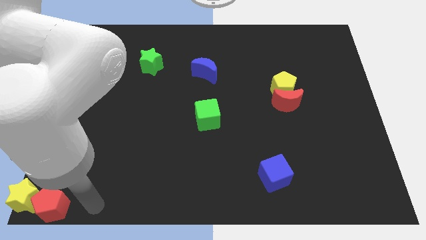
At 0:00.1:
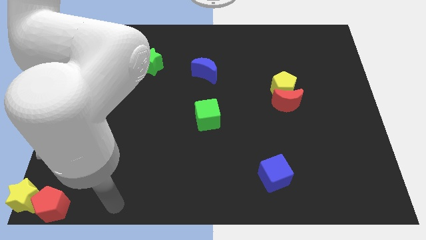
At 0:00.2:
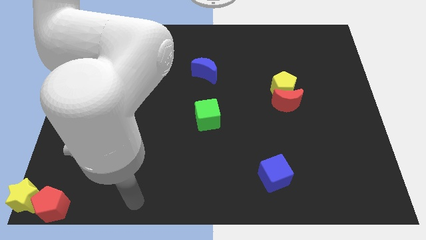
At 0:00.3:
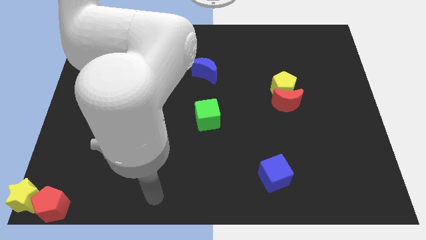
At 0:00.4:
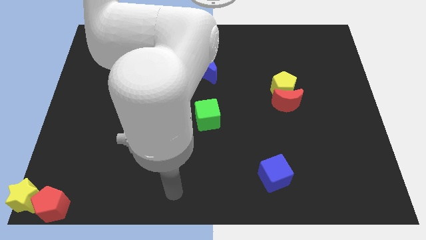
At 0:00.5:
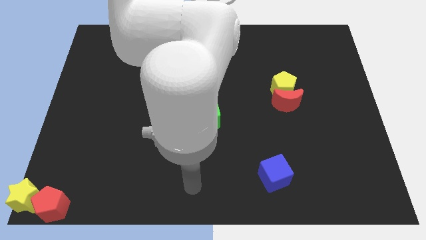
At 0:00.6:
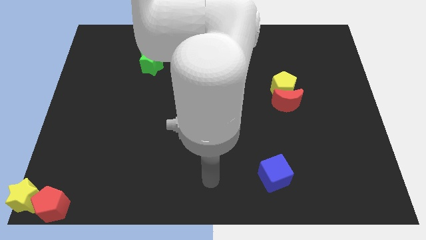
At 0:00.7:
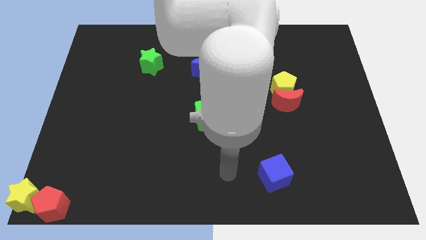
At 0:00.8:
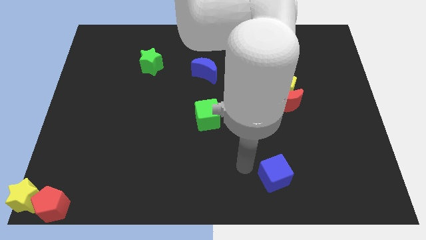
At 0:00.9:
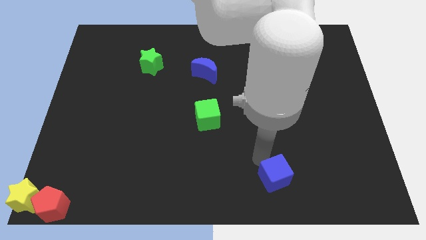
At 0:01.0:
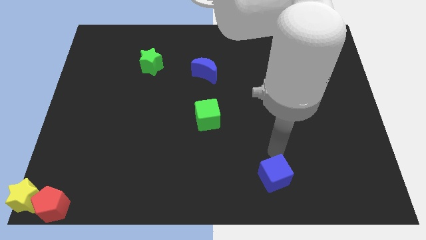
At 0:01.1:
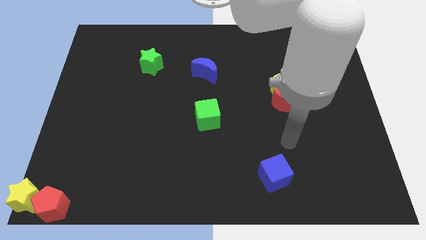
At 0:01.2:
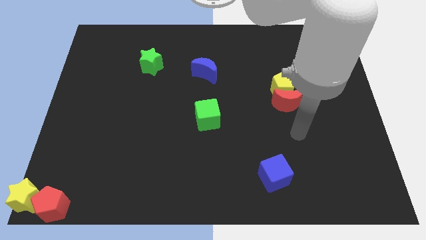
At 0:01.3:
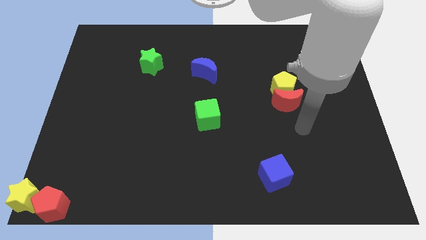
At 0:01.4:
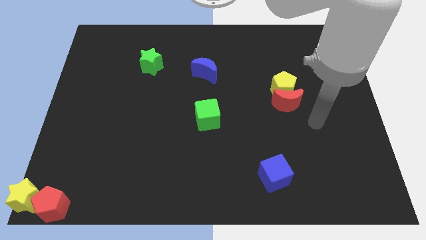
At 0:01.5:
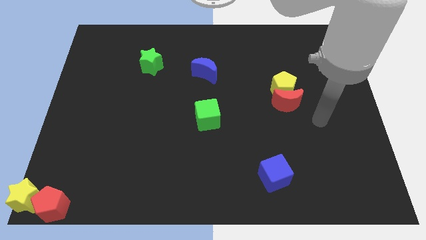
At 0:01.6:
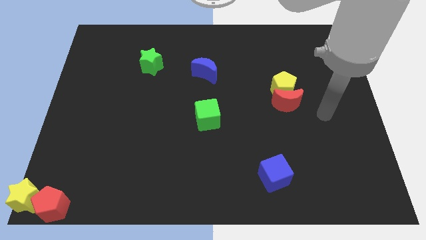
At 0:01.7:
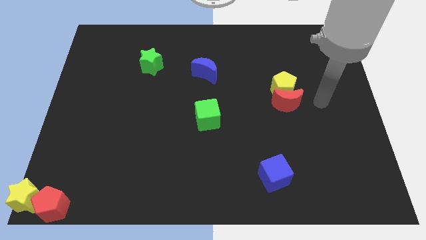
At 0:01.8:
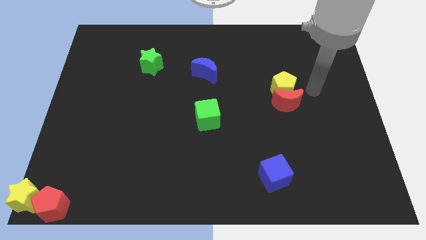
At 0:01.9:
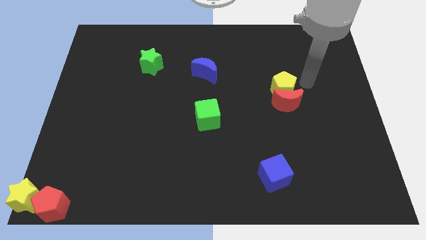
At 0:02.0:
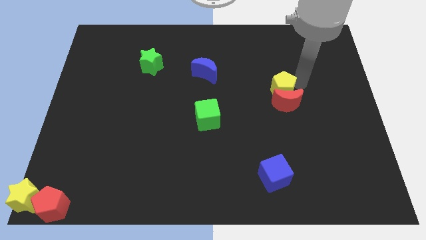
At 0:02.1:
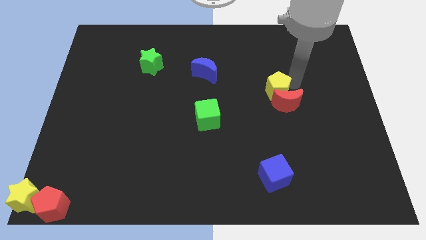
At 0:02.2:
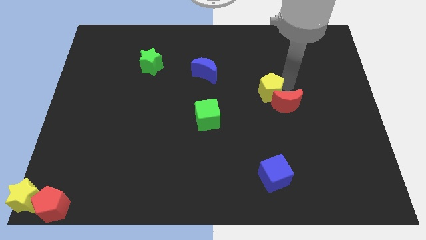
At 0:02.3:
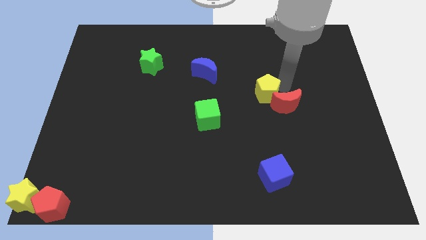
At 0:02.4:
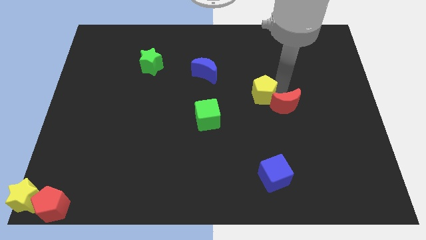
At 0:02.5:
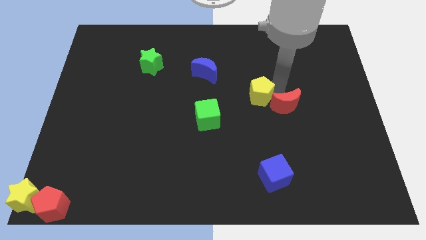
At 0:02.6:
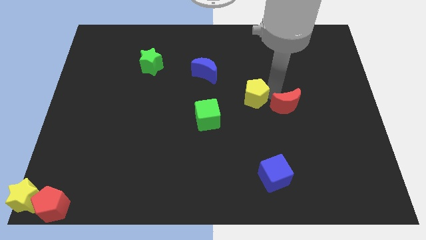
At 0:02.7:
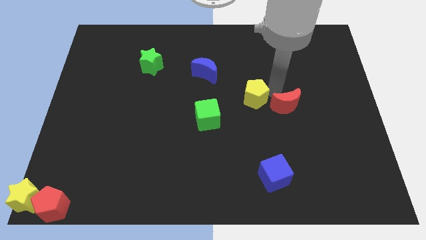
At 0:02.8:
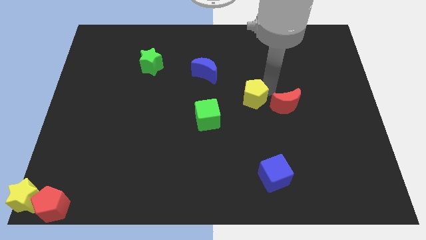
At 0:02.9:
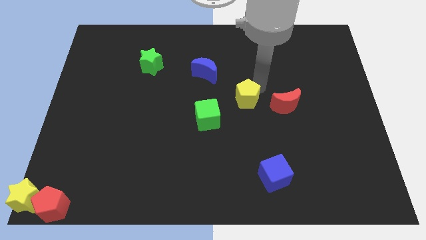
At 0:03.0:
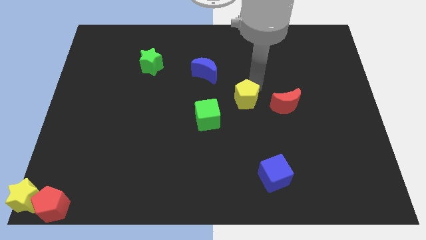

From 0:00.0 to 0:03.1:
move the yellow pentagon to the left of the red crescent

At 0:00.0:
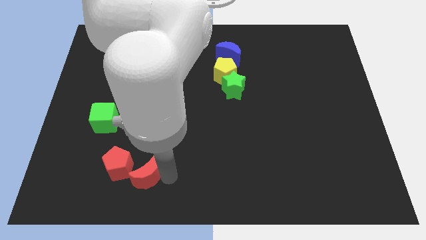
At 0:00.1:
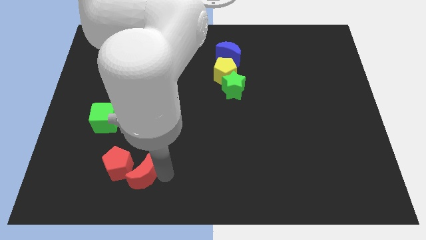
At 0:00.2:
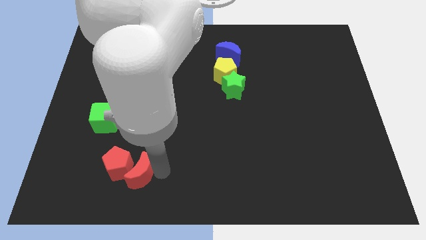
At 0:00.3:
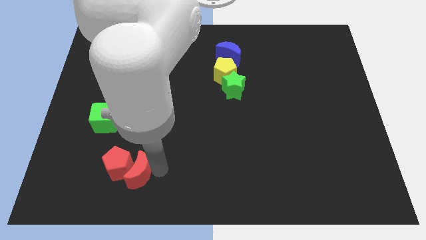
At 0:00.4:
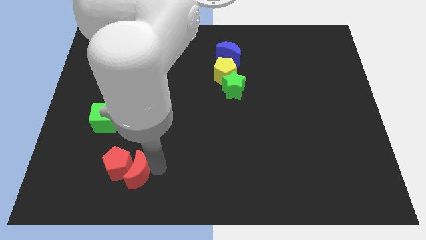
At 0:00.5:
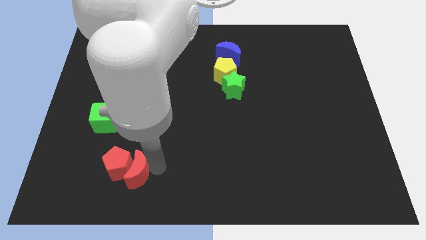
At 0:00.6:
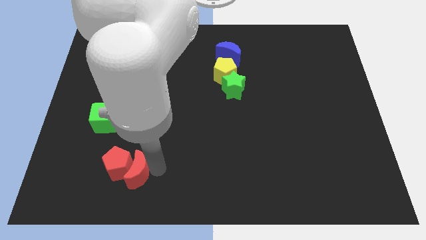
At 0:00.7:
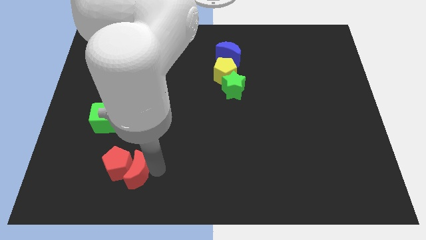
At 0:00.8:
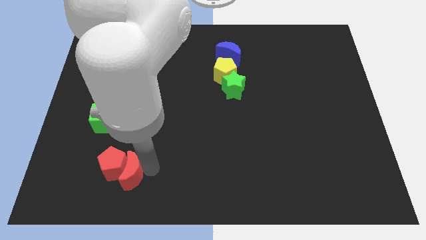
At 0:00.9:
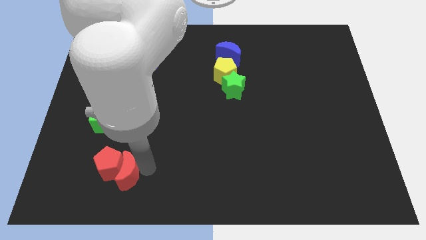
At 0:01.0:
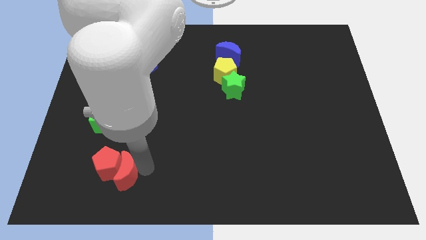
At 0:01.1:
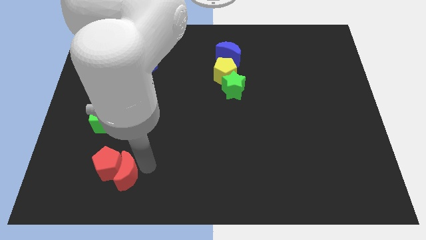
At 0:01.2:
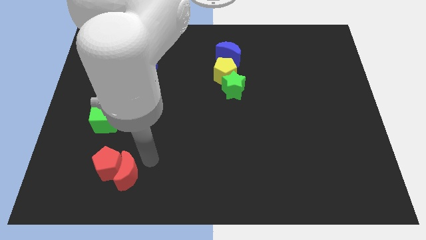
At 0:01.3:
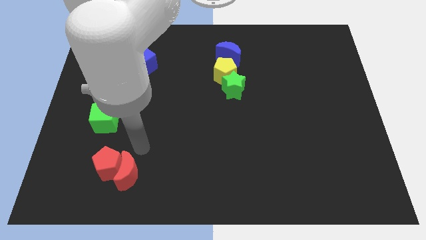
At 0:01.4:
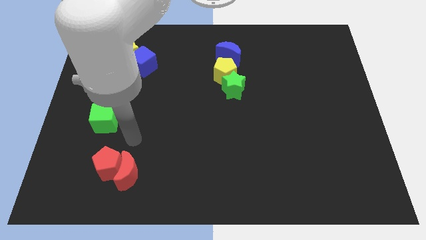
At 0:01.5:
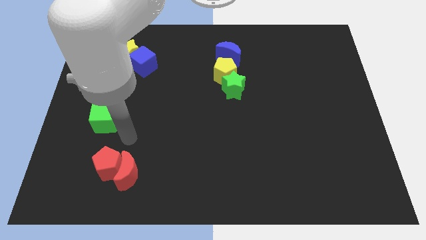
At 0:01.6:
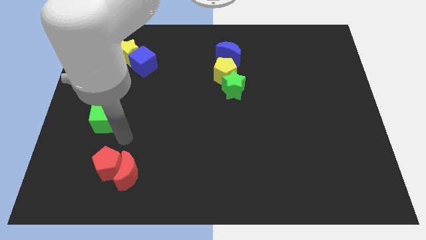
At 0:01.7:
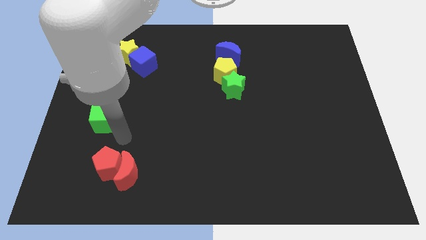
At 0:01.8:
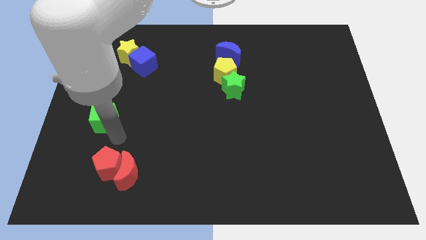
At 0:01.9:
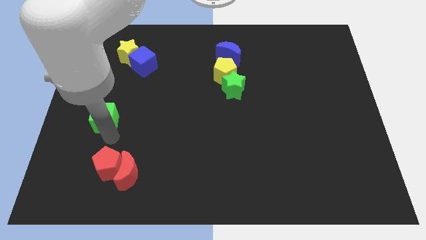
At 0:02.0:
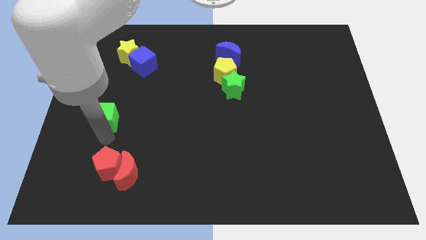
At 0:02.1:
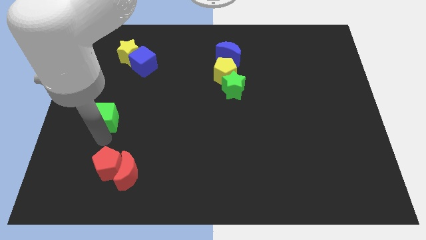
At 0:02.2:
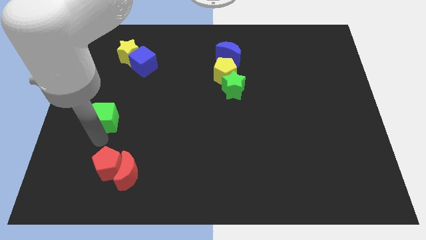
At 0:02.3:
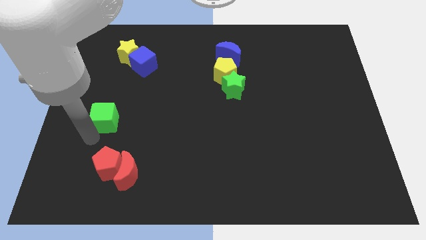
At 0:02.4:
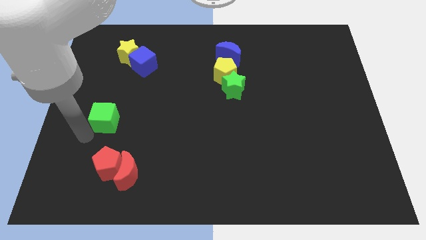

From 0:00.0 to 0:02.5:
move the red blocks slightly left

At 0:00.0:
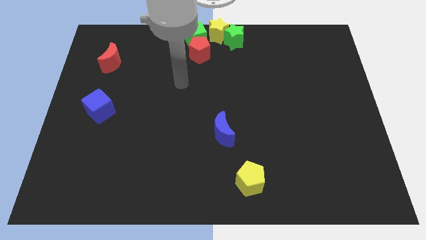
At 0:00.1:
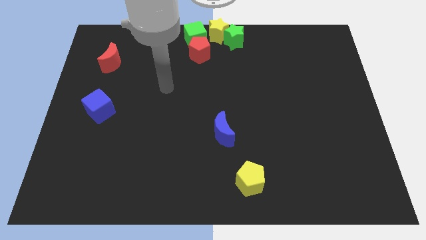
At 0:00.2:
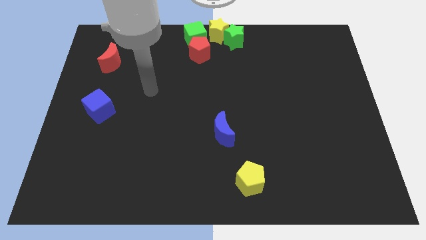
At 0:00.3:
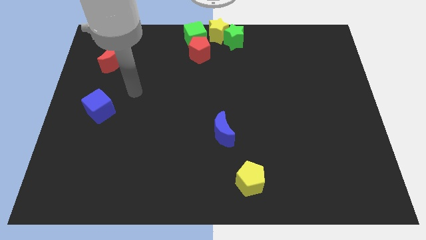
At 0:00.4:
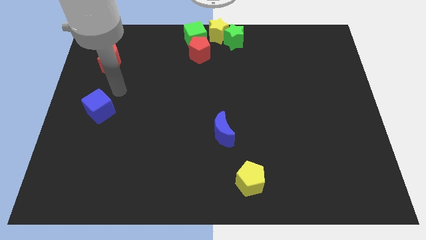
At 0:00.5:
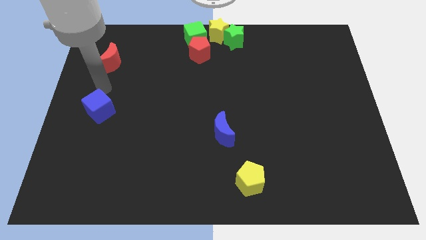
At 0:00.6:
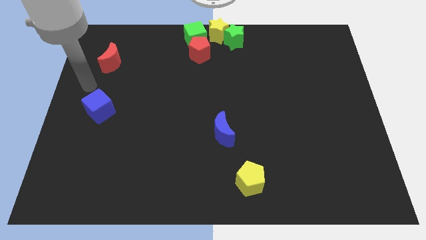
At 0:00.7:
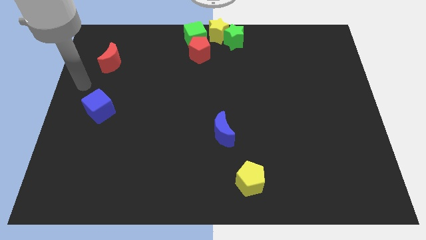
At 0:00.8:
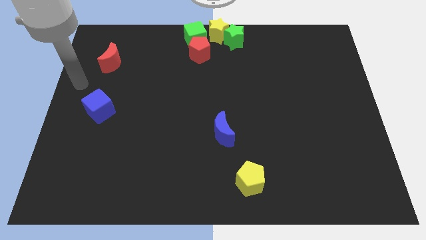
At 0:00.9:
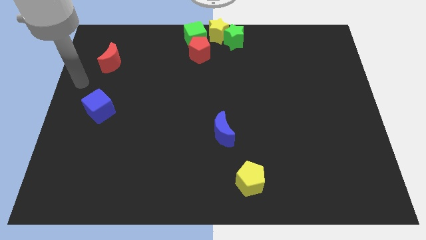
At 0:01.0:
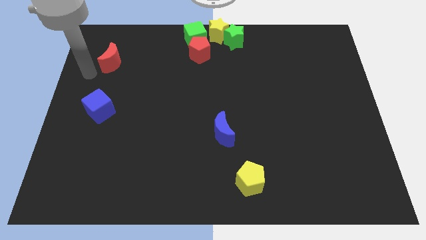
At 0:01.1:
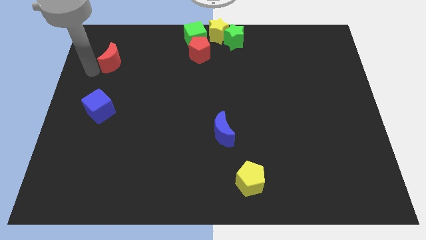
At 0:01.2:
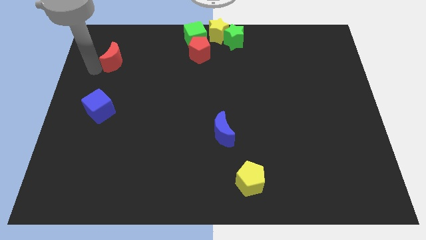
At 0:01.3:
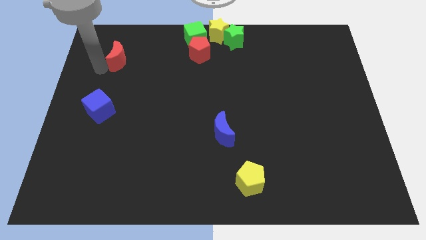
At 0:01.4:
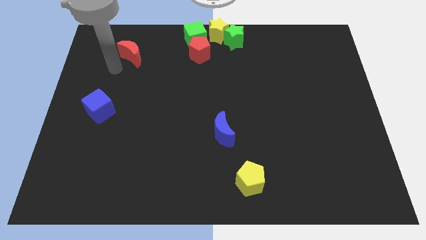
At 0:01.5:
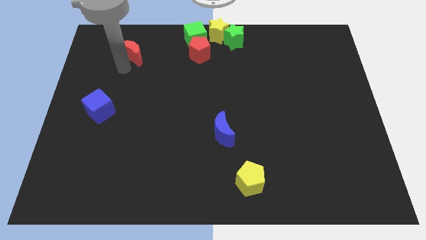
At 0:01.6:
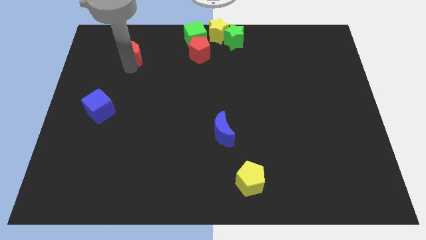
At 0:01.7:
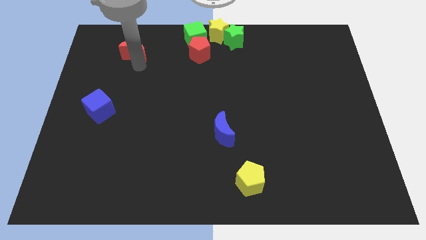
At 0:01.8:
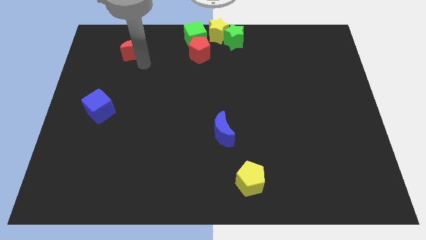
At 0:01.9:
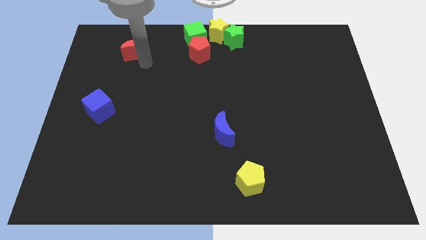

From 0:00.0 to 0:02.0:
move the red crescent horizontally to the left side of the red pentagon

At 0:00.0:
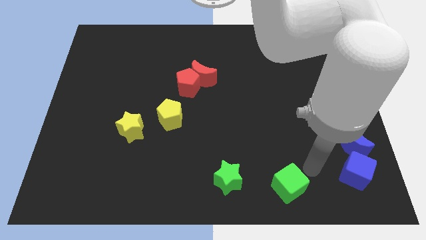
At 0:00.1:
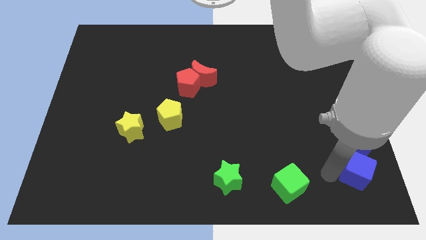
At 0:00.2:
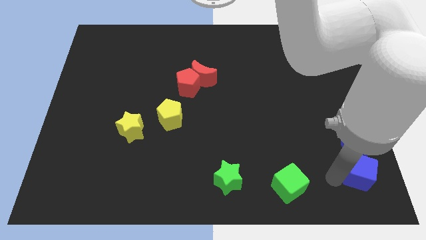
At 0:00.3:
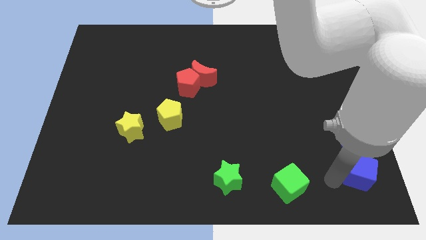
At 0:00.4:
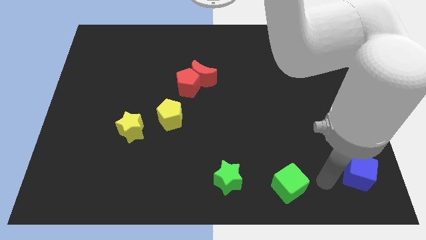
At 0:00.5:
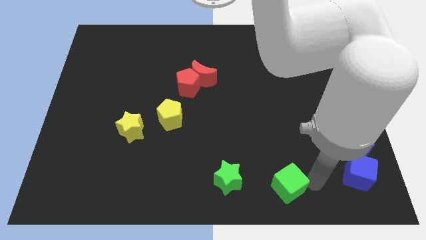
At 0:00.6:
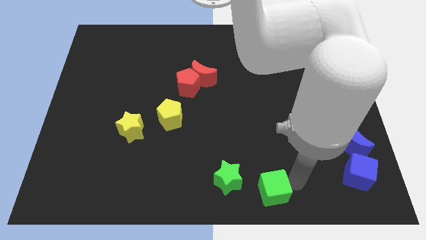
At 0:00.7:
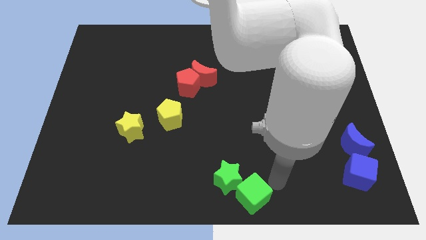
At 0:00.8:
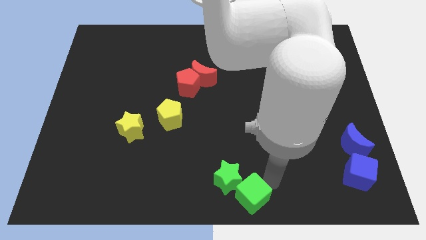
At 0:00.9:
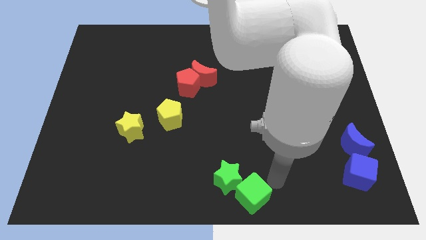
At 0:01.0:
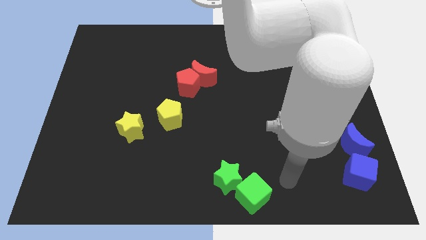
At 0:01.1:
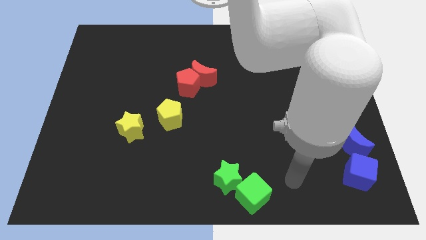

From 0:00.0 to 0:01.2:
push the green cube into the green star

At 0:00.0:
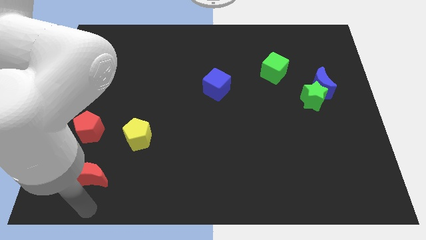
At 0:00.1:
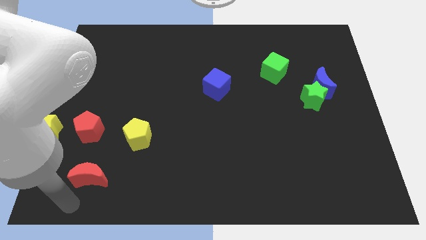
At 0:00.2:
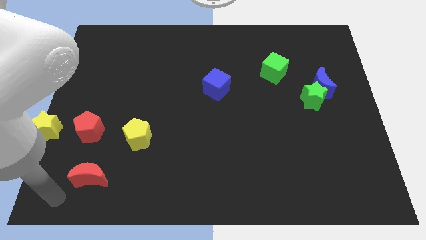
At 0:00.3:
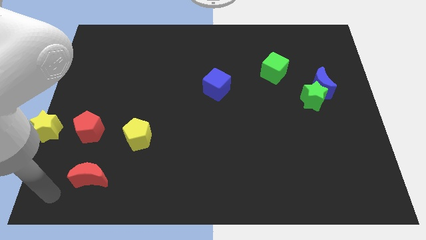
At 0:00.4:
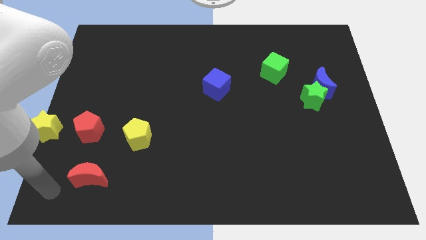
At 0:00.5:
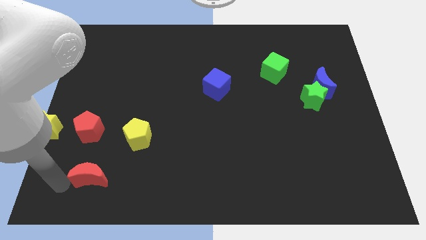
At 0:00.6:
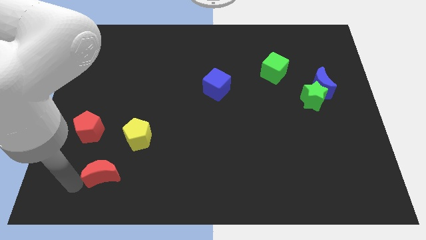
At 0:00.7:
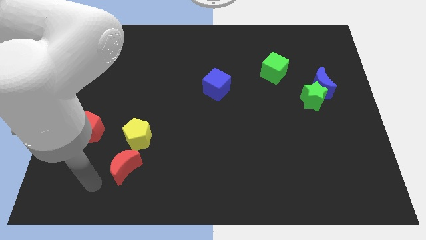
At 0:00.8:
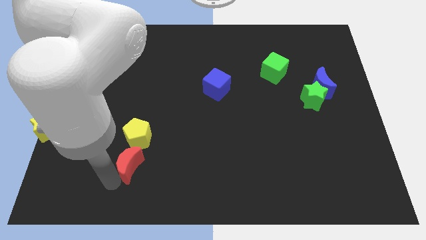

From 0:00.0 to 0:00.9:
push red moon below yellow pentagon
